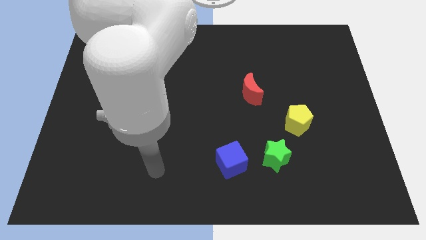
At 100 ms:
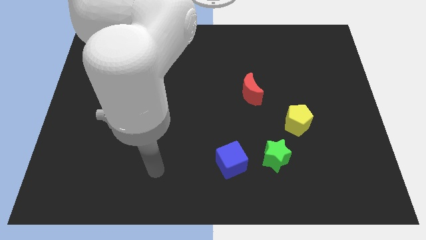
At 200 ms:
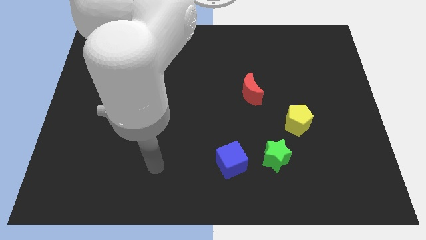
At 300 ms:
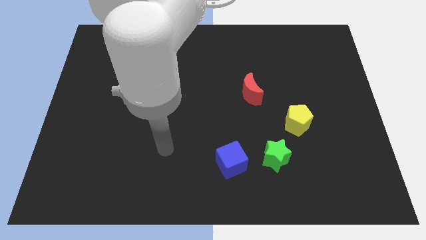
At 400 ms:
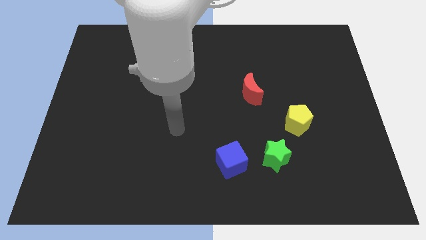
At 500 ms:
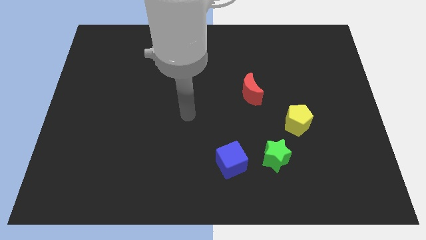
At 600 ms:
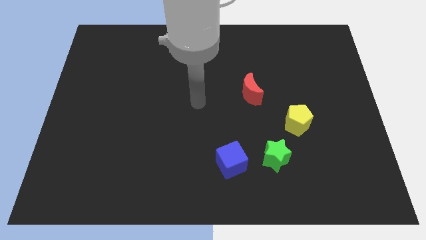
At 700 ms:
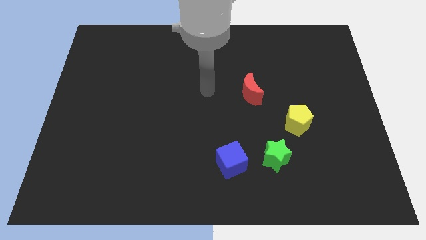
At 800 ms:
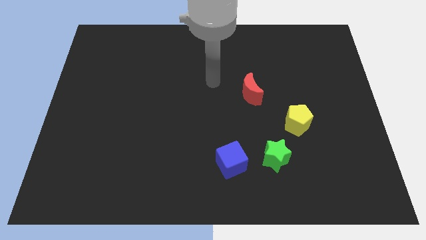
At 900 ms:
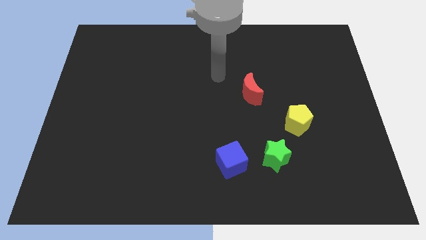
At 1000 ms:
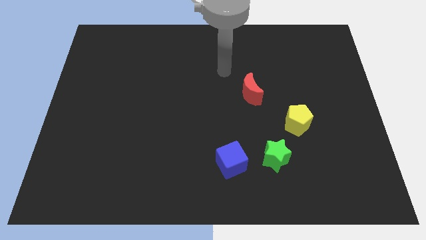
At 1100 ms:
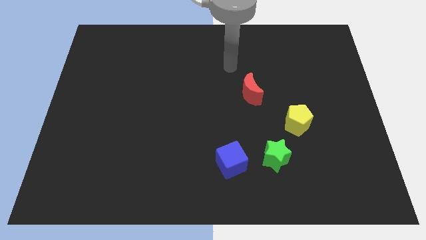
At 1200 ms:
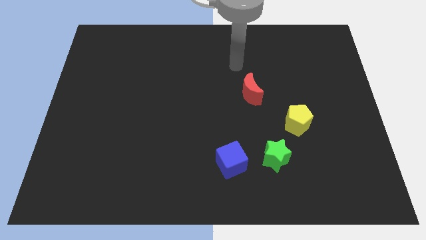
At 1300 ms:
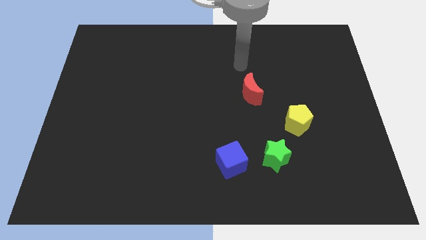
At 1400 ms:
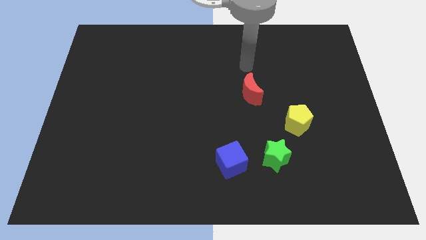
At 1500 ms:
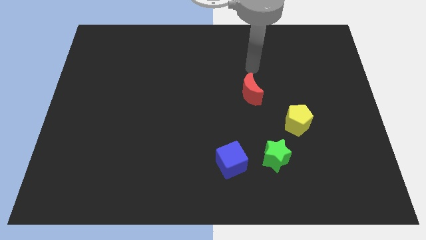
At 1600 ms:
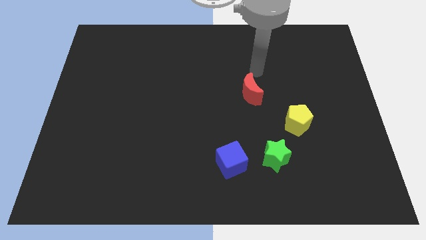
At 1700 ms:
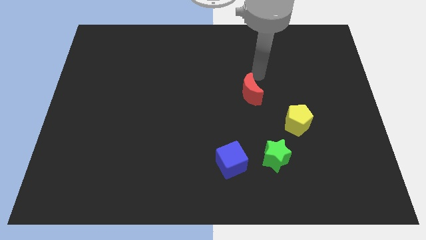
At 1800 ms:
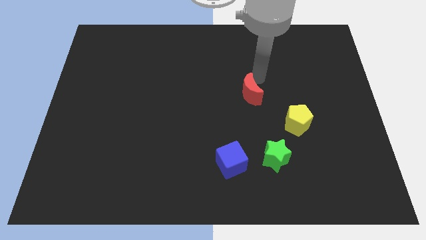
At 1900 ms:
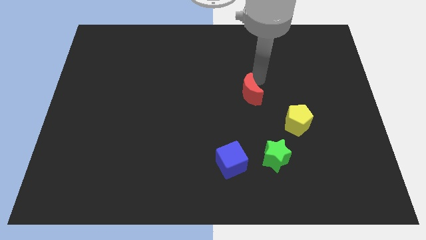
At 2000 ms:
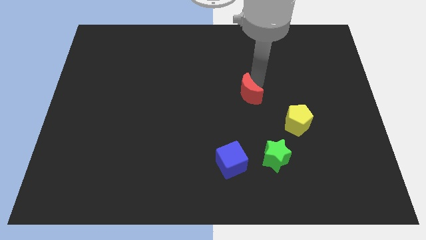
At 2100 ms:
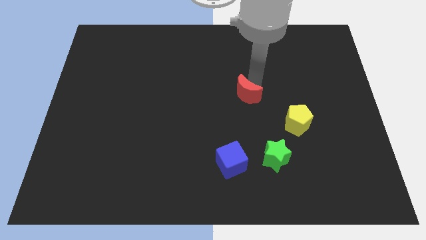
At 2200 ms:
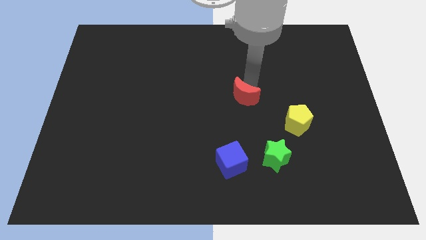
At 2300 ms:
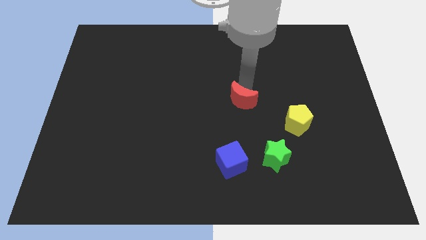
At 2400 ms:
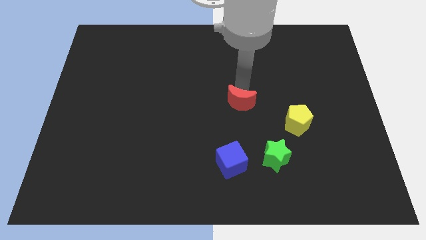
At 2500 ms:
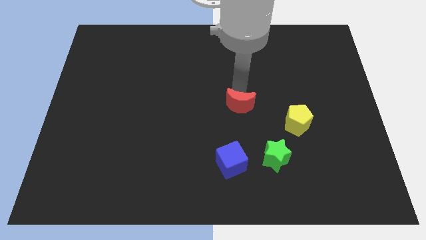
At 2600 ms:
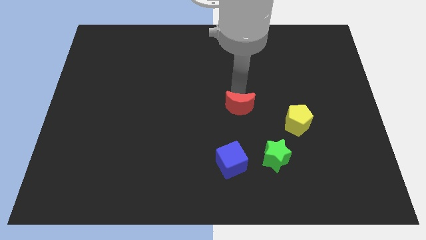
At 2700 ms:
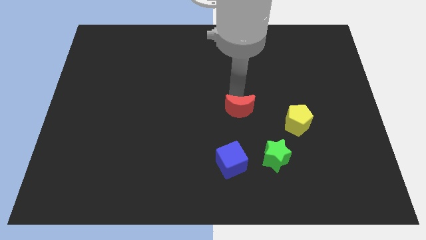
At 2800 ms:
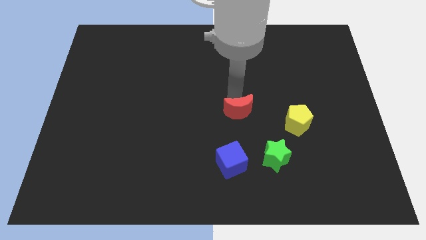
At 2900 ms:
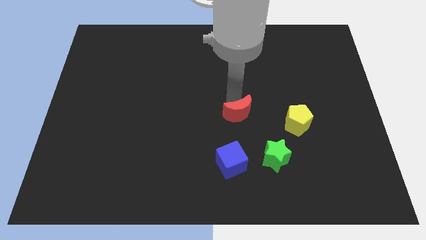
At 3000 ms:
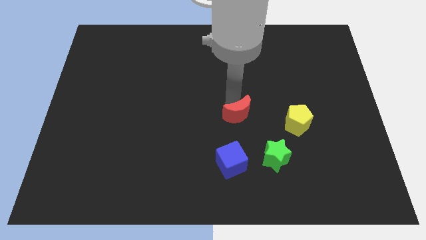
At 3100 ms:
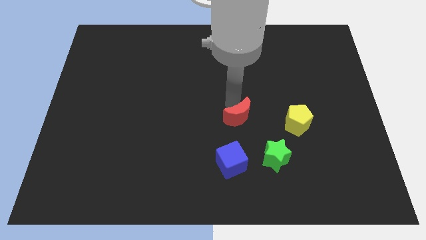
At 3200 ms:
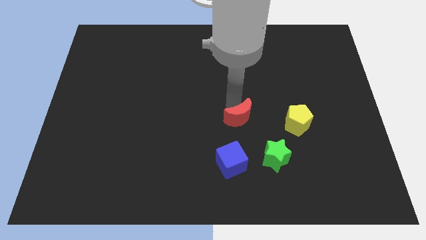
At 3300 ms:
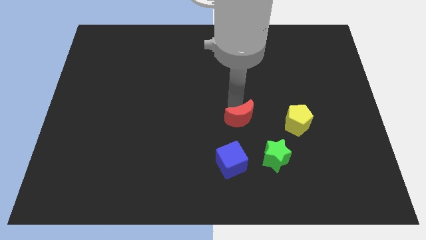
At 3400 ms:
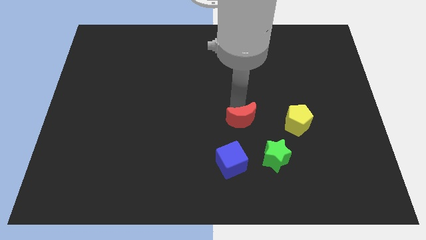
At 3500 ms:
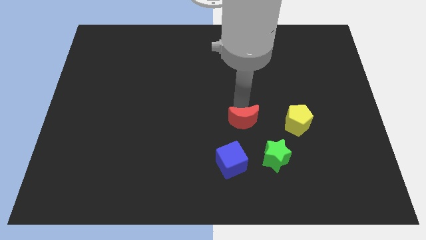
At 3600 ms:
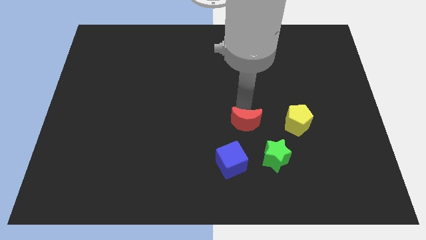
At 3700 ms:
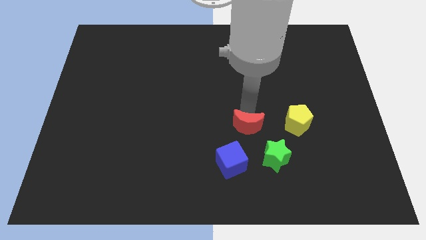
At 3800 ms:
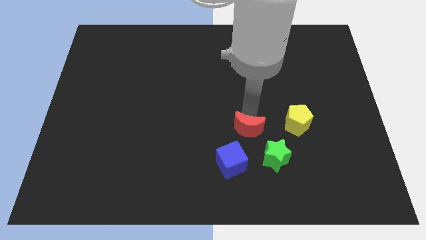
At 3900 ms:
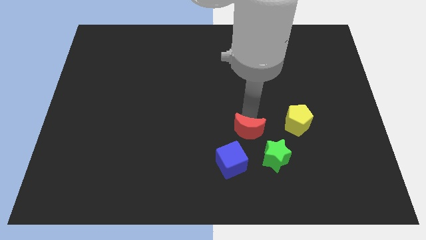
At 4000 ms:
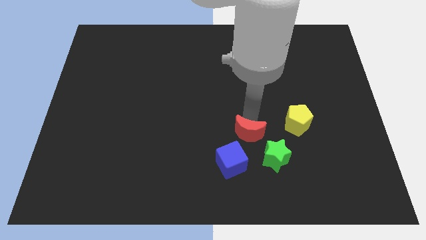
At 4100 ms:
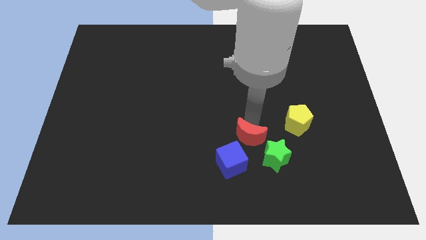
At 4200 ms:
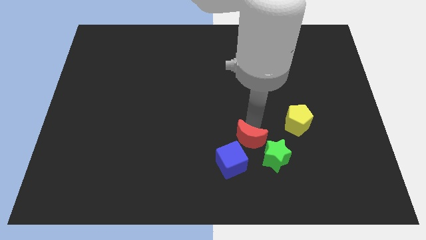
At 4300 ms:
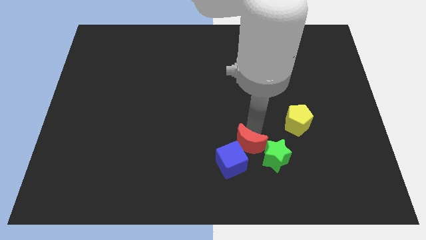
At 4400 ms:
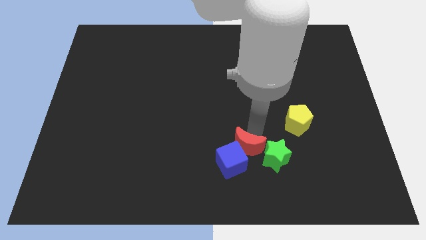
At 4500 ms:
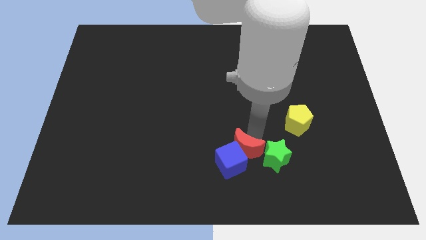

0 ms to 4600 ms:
slide the red moon to the blue cube

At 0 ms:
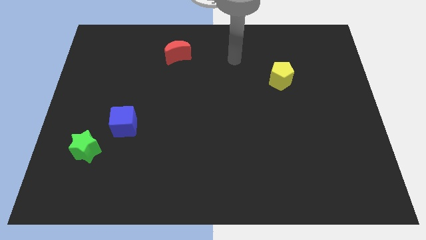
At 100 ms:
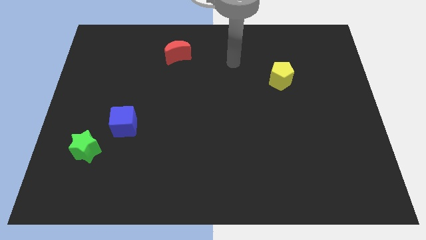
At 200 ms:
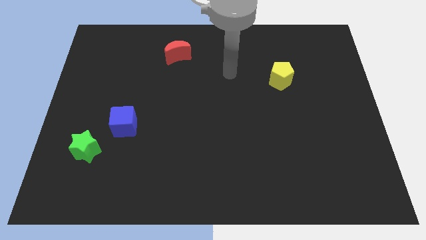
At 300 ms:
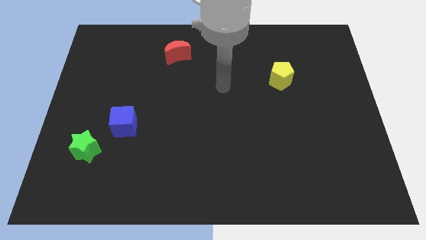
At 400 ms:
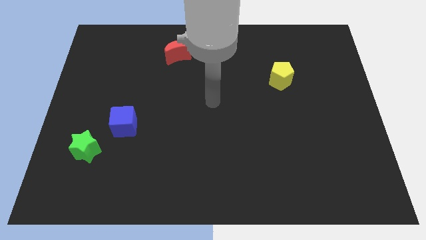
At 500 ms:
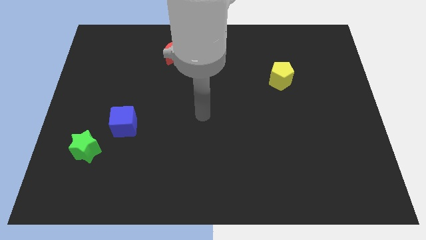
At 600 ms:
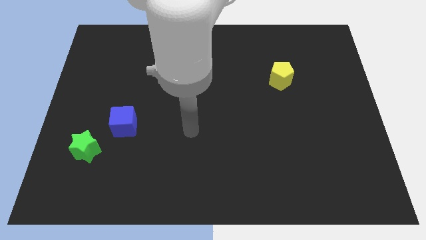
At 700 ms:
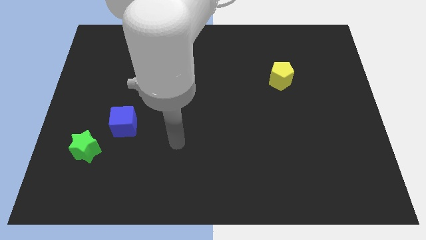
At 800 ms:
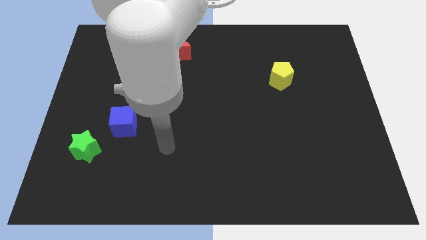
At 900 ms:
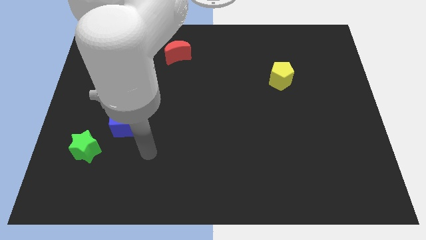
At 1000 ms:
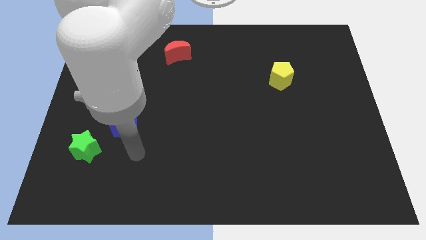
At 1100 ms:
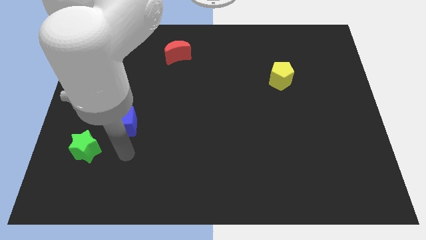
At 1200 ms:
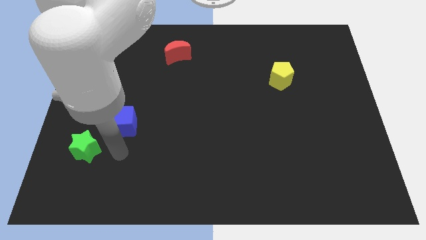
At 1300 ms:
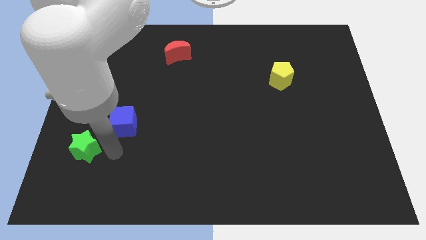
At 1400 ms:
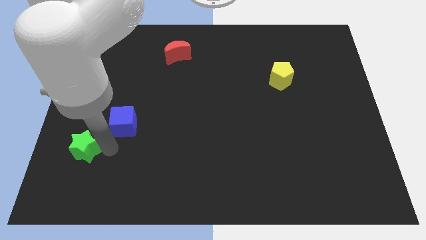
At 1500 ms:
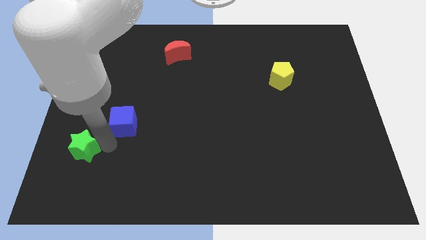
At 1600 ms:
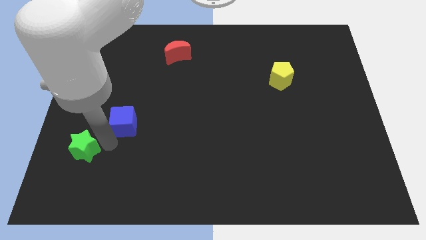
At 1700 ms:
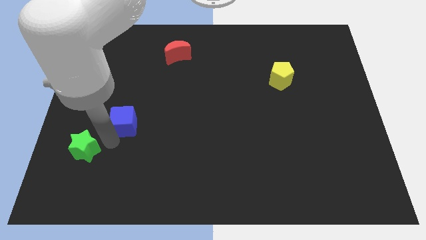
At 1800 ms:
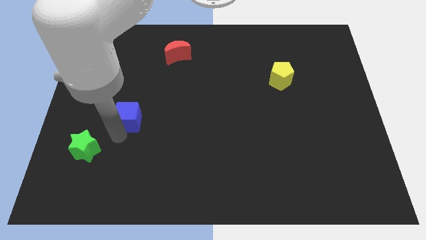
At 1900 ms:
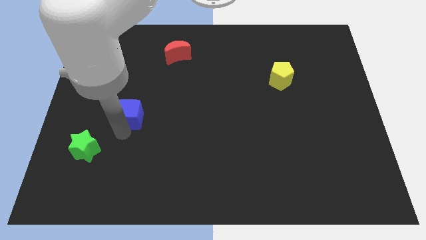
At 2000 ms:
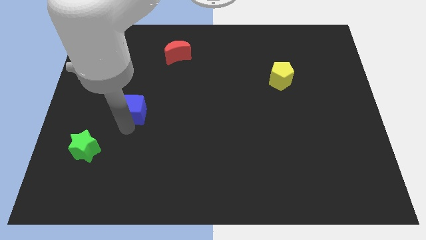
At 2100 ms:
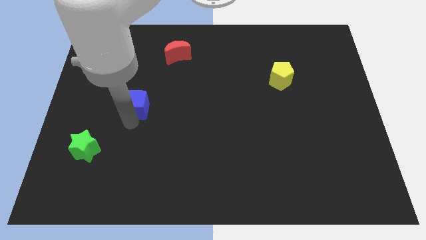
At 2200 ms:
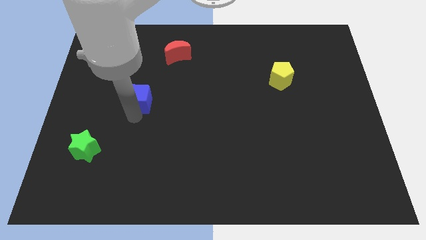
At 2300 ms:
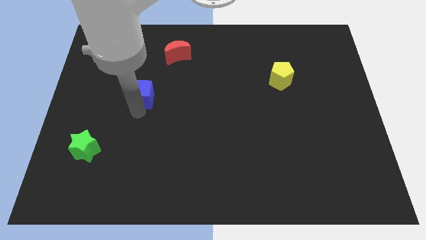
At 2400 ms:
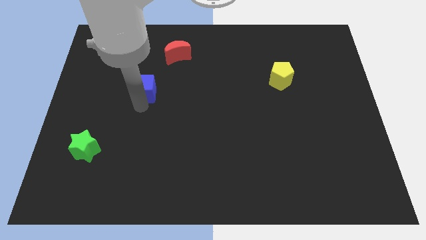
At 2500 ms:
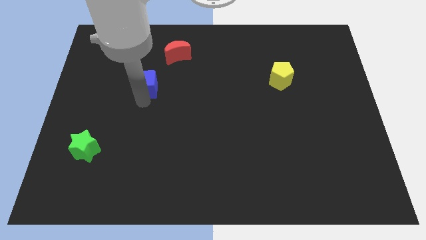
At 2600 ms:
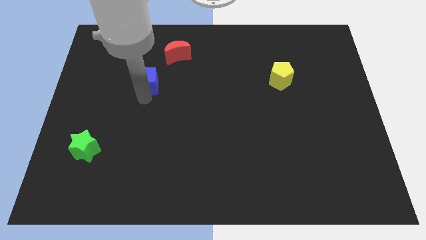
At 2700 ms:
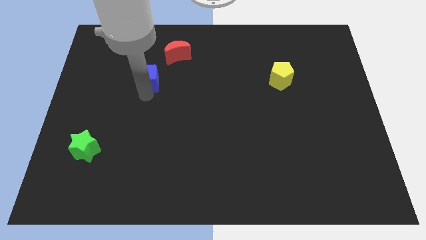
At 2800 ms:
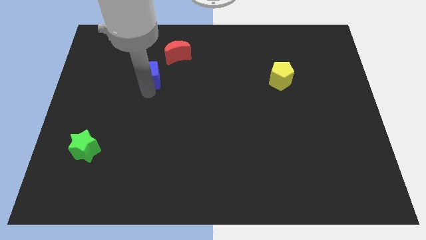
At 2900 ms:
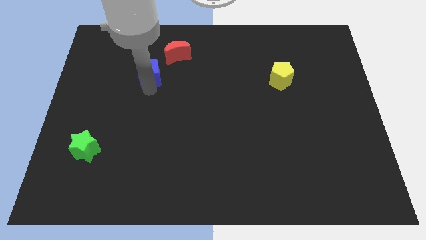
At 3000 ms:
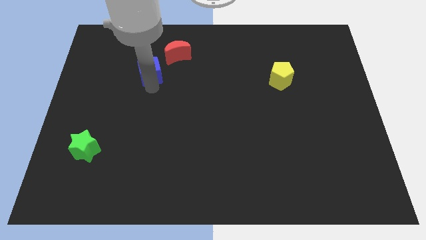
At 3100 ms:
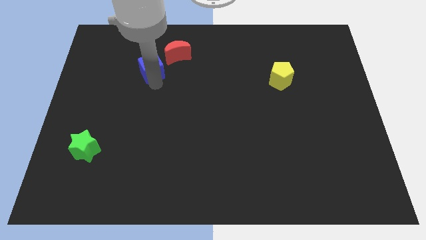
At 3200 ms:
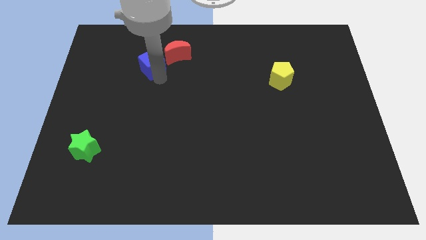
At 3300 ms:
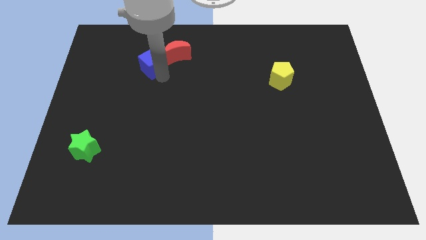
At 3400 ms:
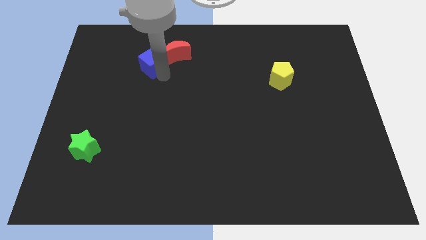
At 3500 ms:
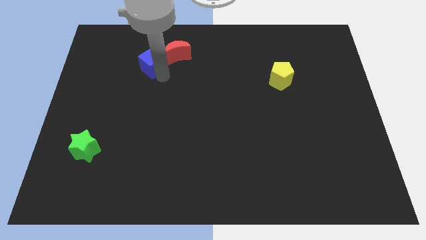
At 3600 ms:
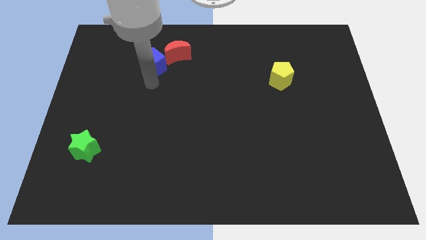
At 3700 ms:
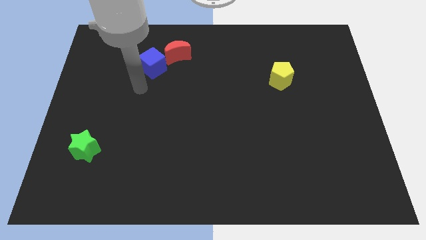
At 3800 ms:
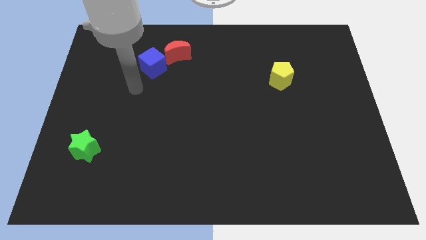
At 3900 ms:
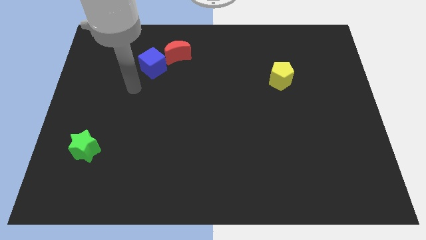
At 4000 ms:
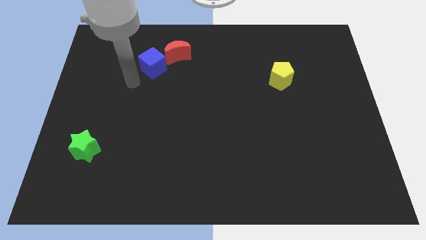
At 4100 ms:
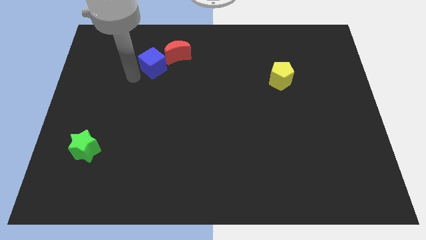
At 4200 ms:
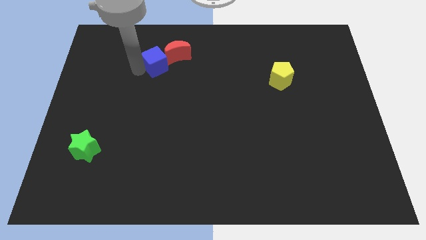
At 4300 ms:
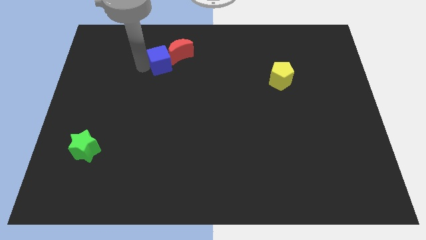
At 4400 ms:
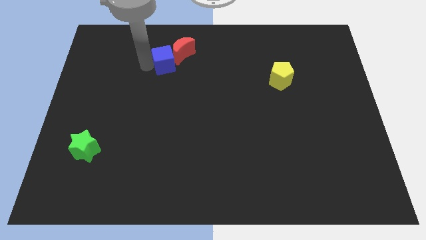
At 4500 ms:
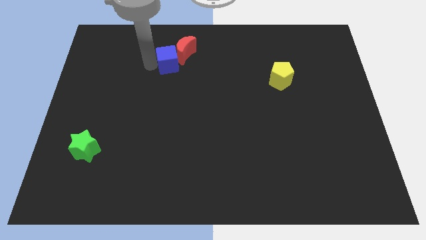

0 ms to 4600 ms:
slide the blue block next to the red block
